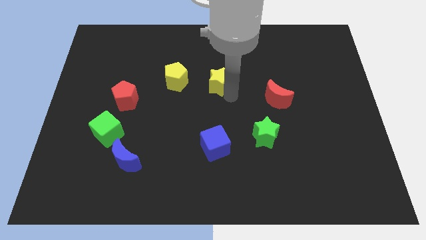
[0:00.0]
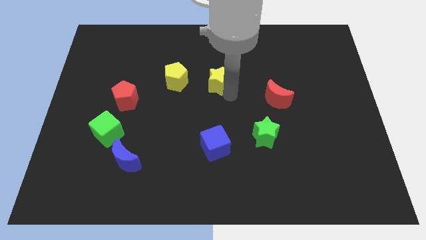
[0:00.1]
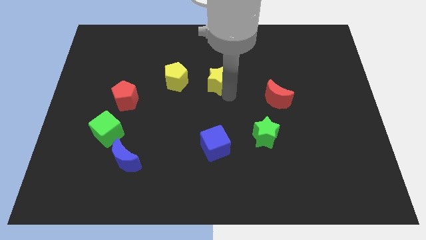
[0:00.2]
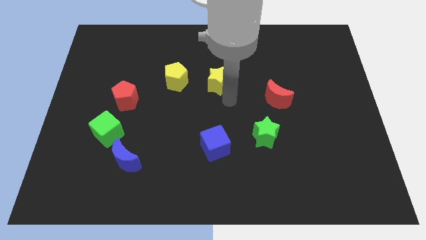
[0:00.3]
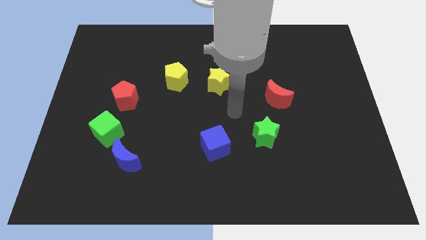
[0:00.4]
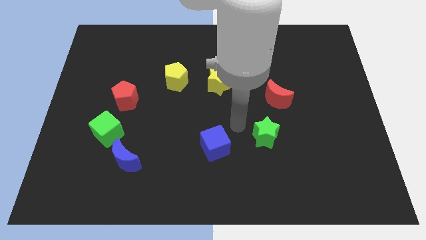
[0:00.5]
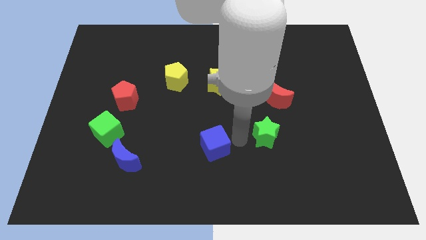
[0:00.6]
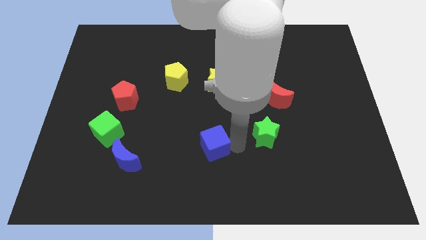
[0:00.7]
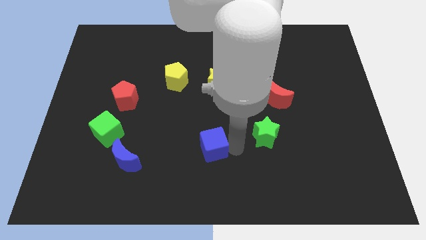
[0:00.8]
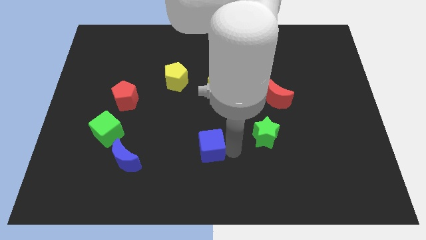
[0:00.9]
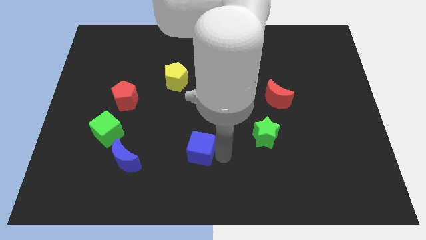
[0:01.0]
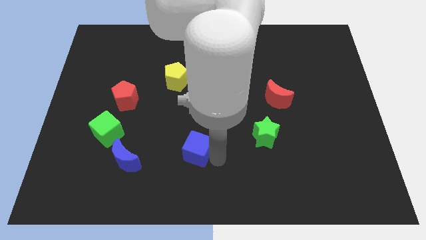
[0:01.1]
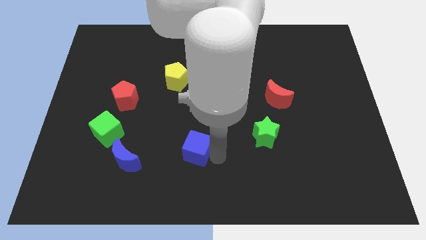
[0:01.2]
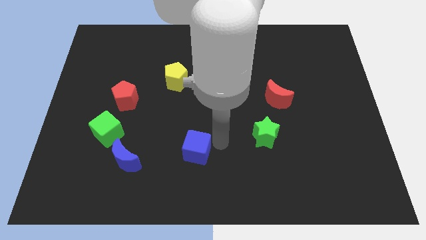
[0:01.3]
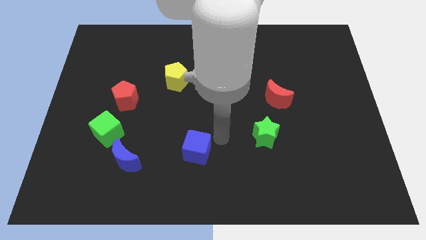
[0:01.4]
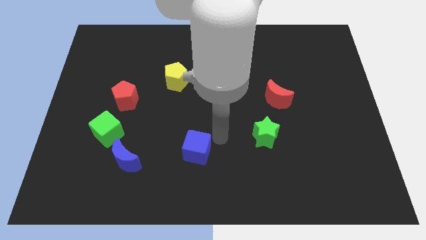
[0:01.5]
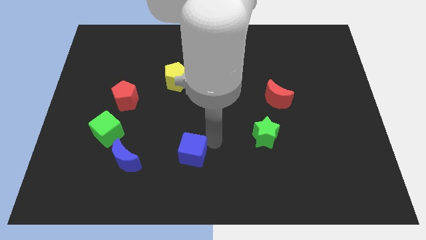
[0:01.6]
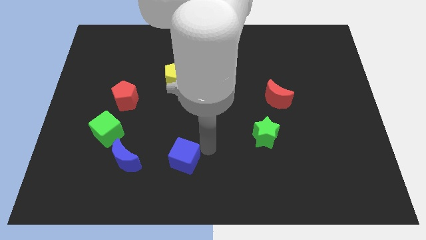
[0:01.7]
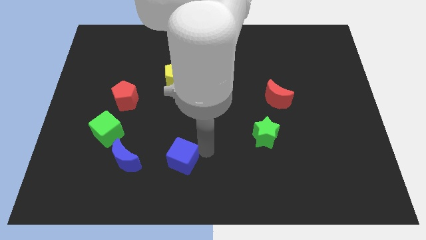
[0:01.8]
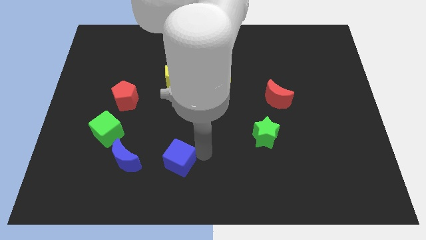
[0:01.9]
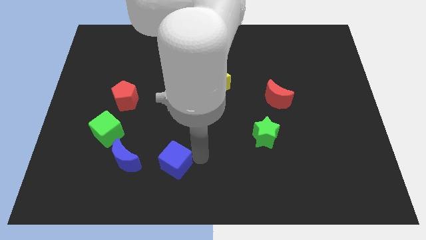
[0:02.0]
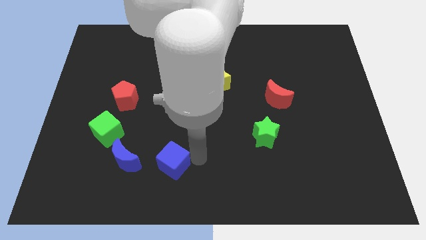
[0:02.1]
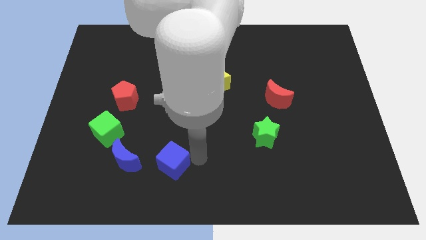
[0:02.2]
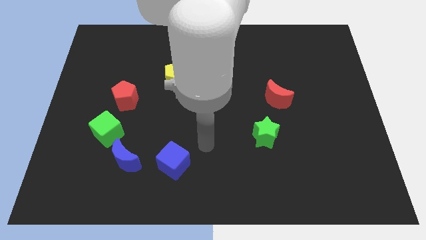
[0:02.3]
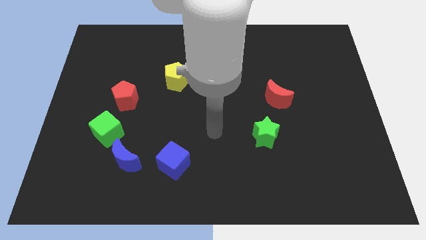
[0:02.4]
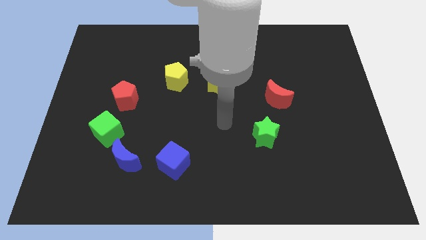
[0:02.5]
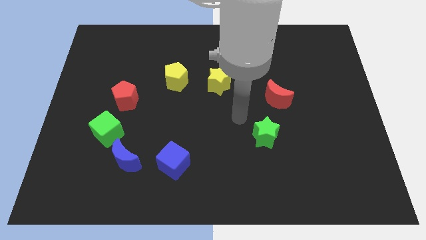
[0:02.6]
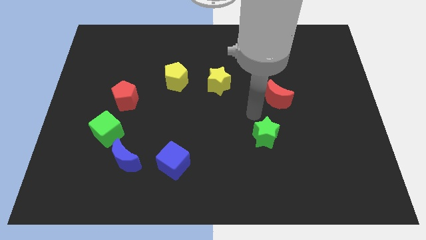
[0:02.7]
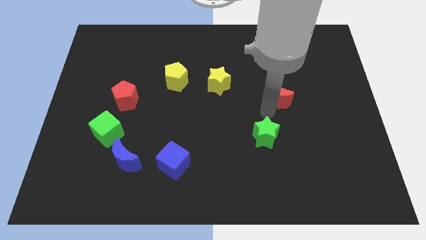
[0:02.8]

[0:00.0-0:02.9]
move the blue cube to the right of the blue crescent

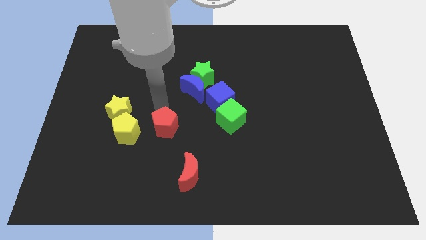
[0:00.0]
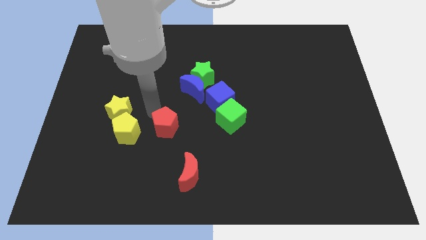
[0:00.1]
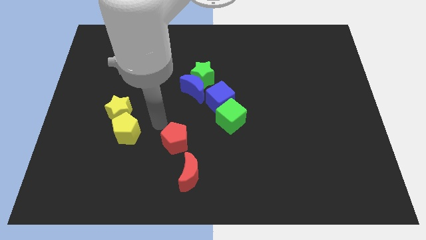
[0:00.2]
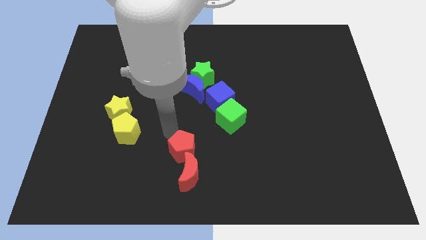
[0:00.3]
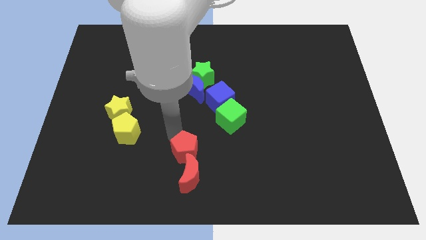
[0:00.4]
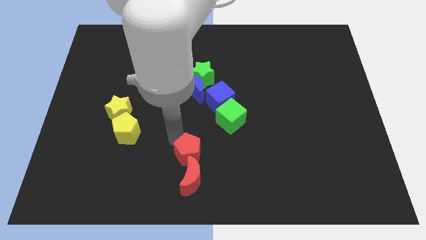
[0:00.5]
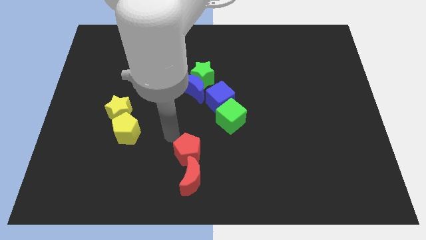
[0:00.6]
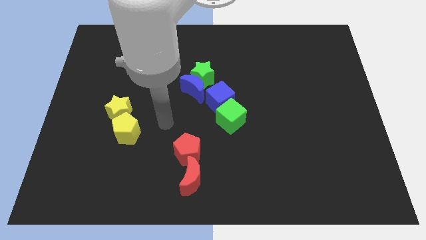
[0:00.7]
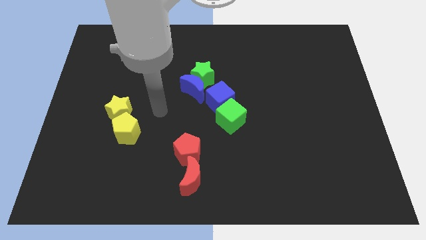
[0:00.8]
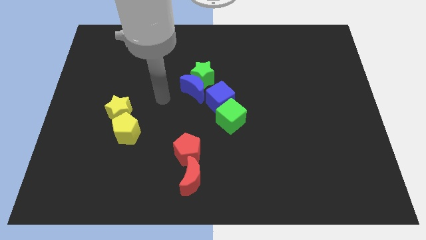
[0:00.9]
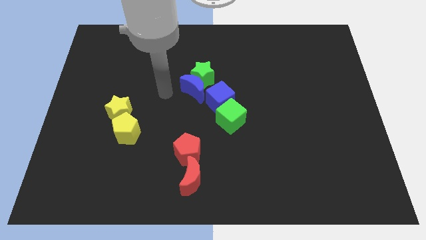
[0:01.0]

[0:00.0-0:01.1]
push the red pentagon into the red moon

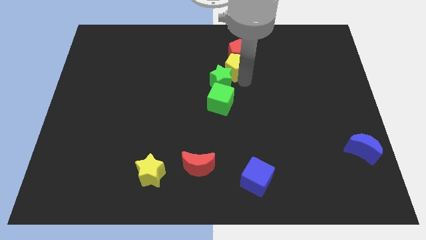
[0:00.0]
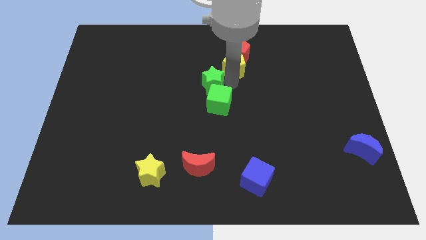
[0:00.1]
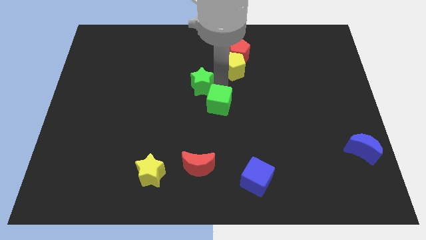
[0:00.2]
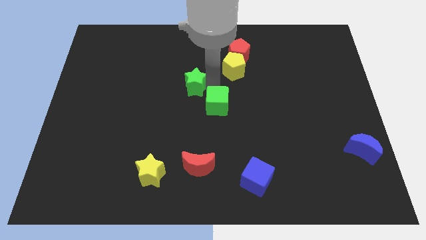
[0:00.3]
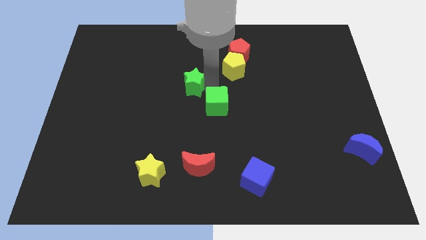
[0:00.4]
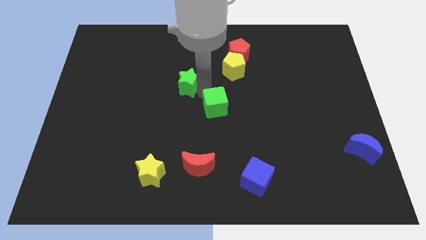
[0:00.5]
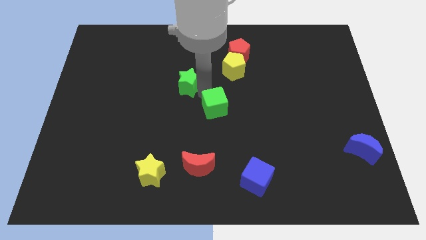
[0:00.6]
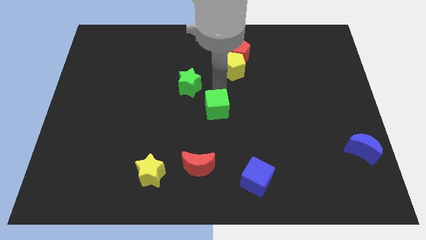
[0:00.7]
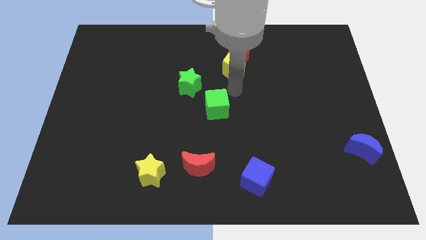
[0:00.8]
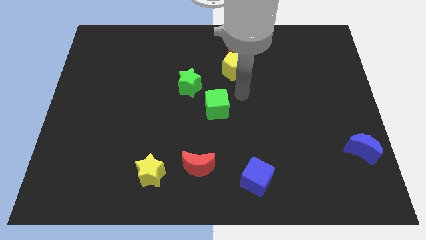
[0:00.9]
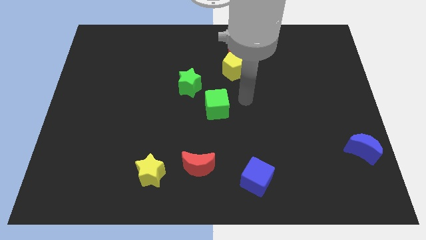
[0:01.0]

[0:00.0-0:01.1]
slide the green star slightly to the left

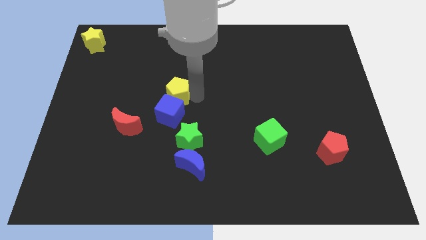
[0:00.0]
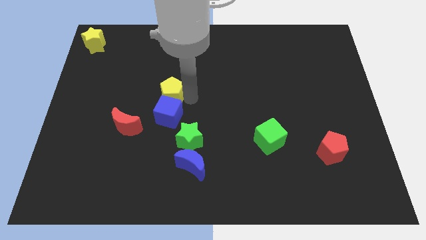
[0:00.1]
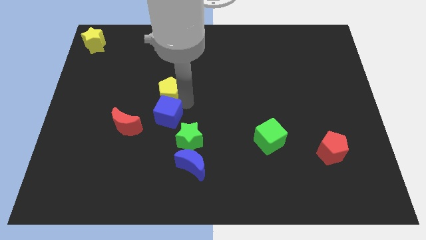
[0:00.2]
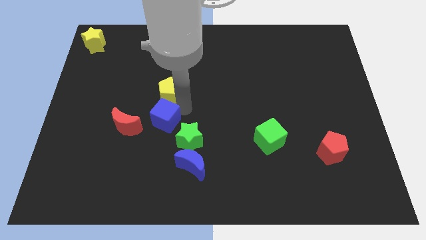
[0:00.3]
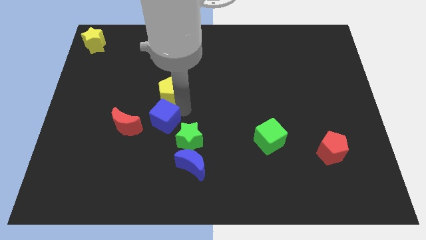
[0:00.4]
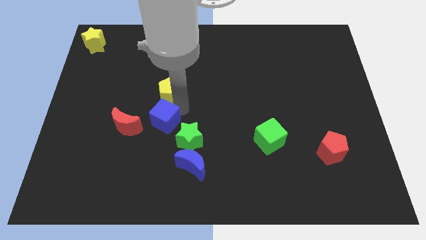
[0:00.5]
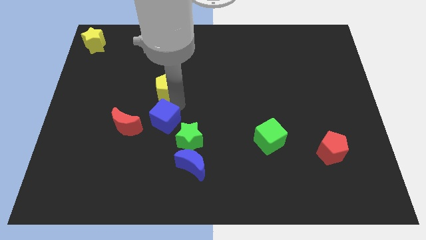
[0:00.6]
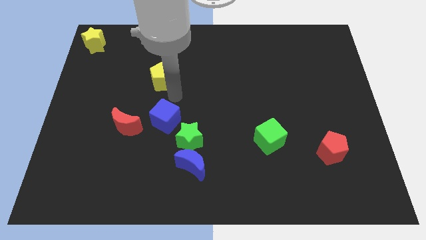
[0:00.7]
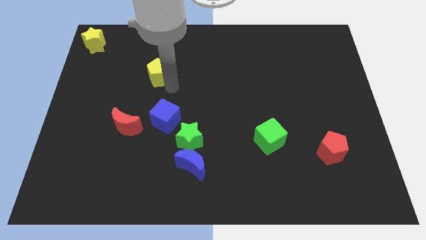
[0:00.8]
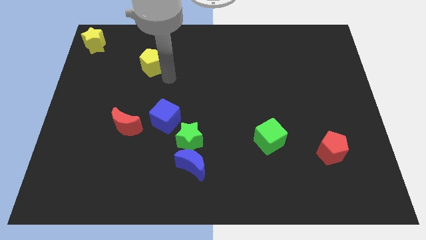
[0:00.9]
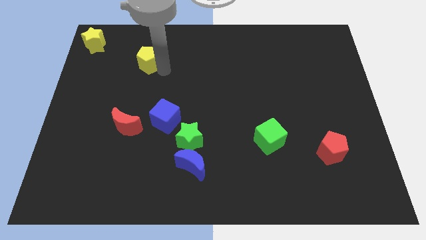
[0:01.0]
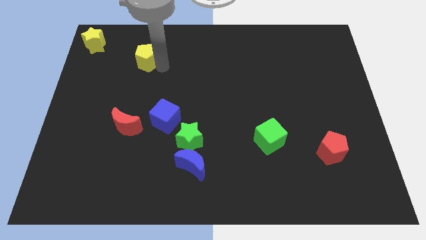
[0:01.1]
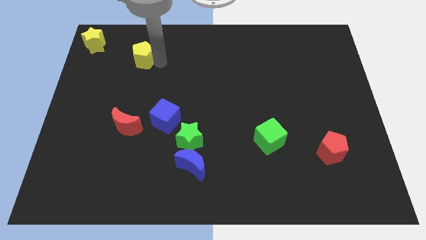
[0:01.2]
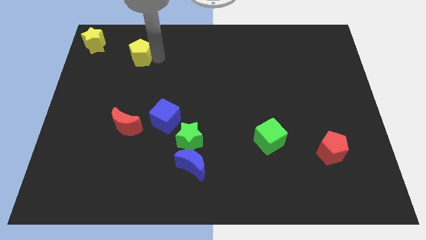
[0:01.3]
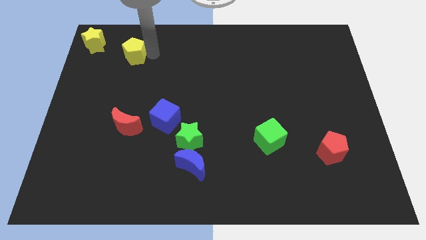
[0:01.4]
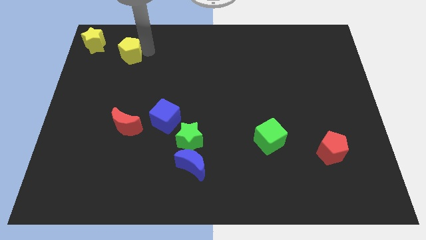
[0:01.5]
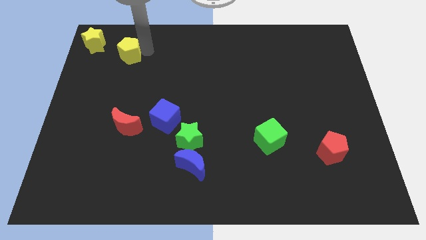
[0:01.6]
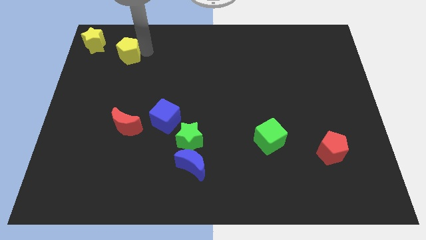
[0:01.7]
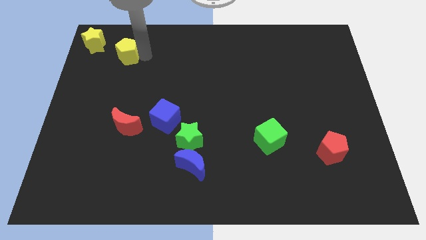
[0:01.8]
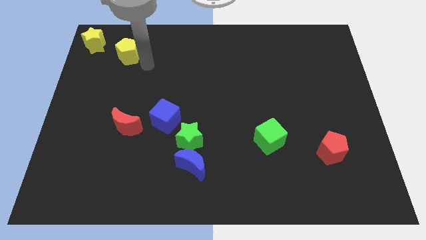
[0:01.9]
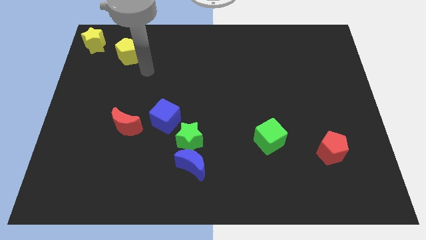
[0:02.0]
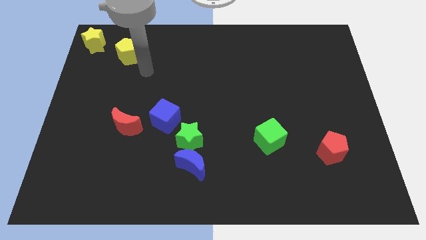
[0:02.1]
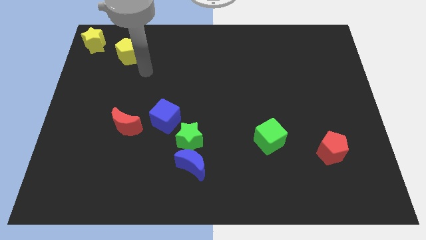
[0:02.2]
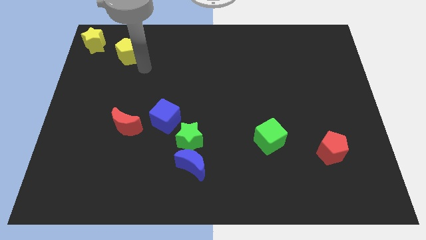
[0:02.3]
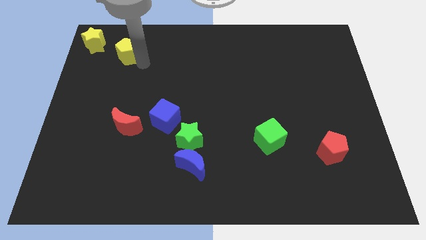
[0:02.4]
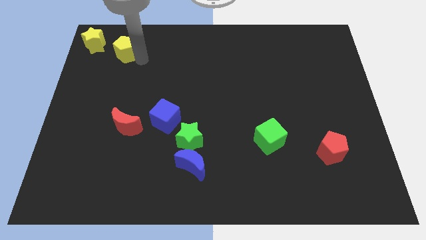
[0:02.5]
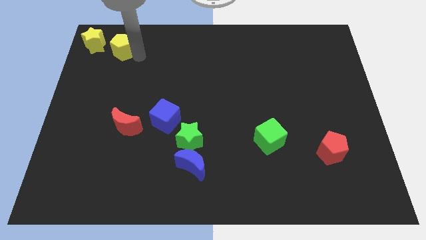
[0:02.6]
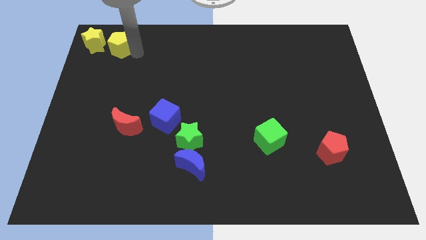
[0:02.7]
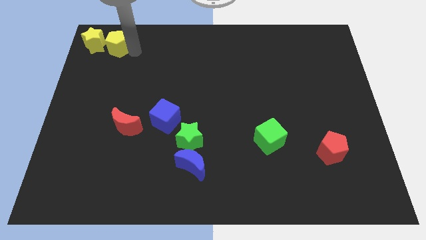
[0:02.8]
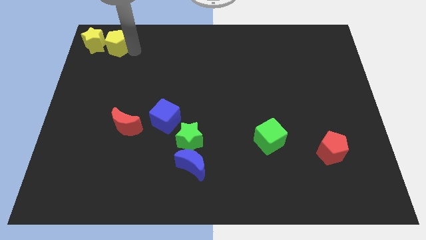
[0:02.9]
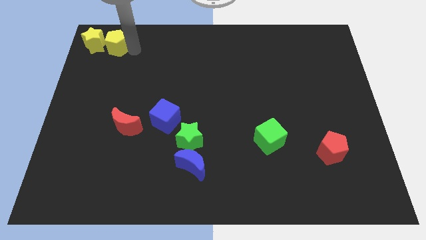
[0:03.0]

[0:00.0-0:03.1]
push the yellow pentagon on the right side of the yellow star

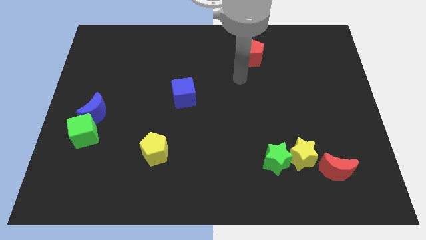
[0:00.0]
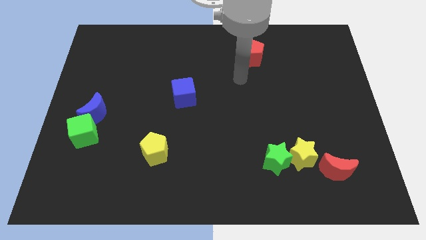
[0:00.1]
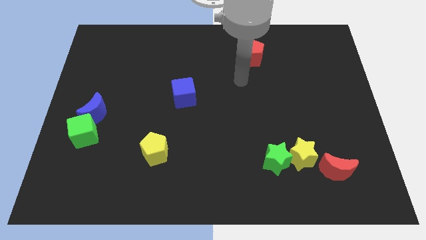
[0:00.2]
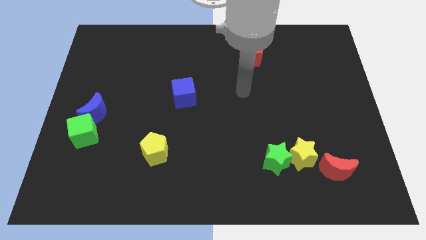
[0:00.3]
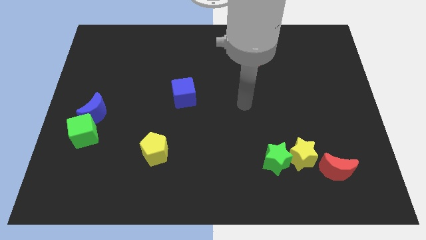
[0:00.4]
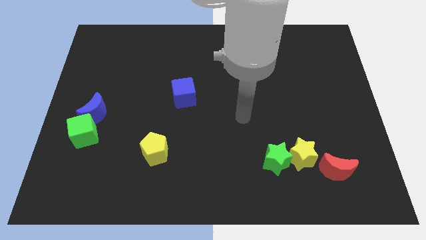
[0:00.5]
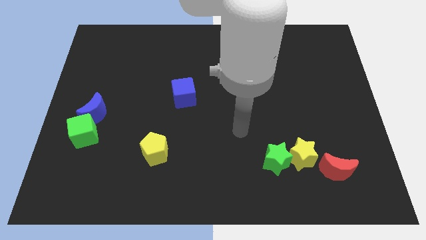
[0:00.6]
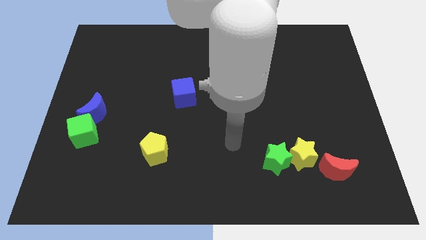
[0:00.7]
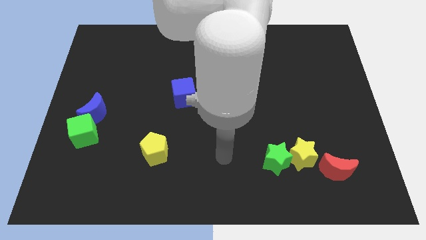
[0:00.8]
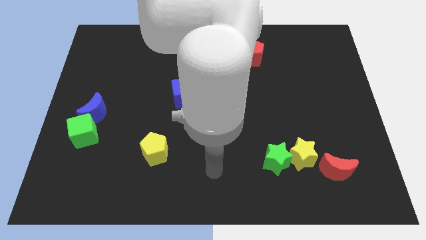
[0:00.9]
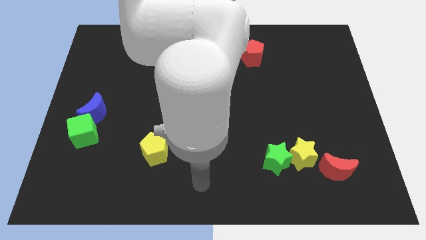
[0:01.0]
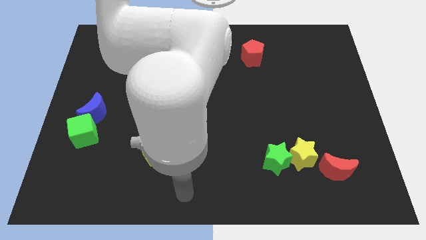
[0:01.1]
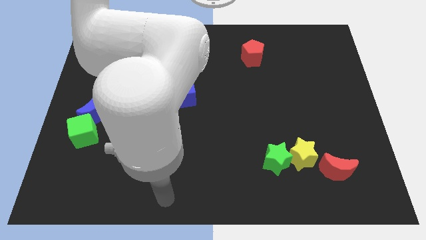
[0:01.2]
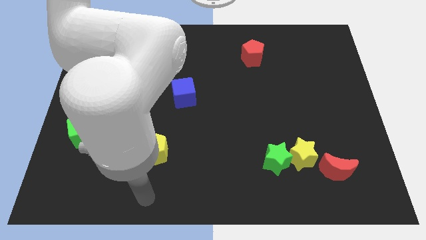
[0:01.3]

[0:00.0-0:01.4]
place your hand vertically below the yellow pentagon
